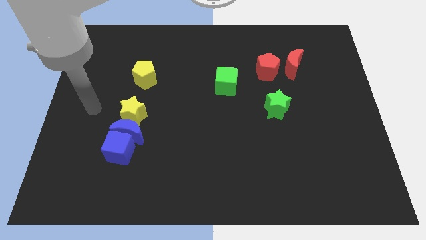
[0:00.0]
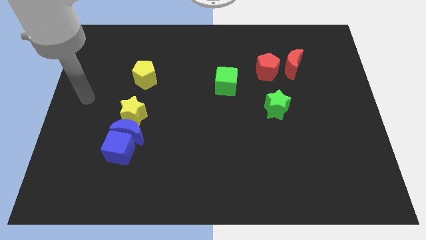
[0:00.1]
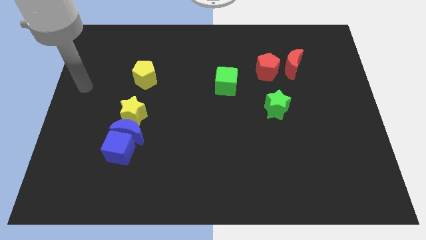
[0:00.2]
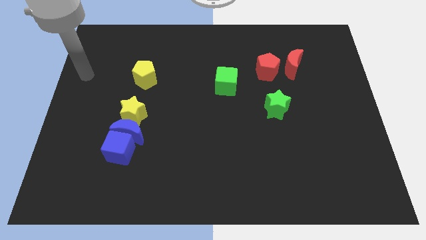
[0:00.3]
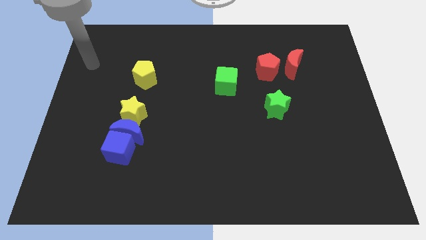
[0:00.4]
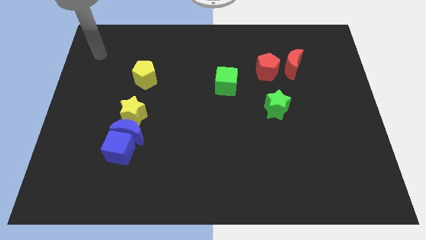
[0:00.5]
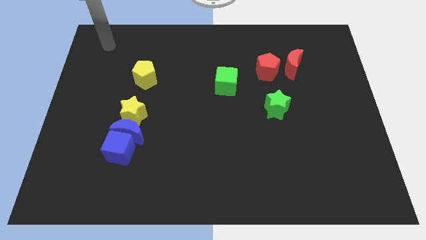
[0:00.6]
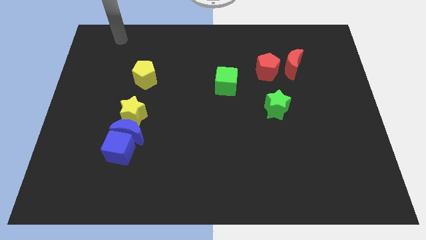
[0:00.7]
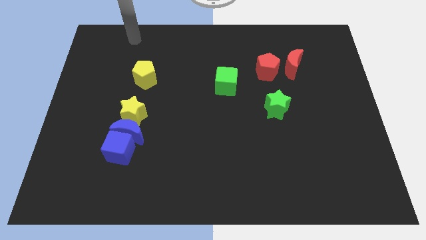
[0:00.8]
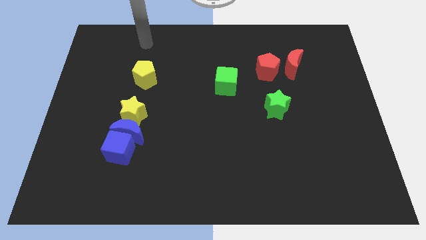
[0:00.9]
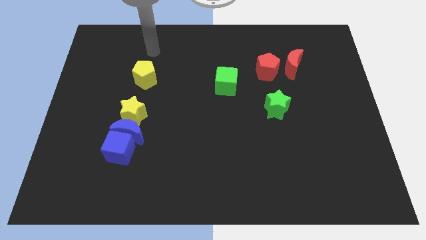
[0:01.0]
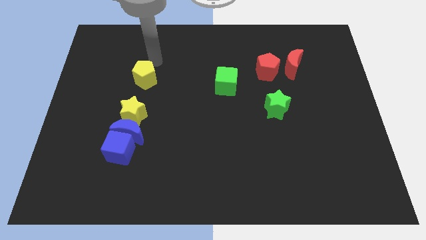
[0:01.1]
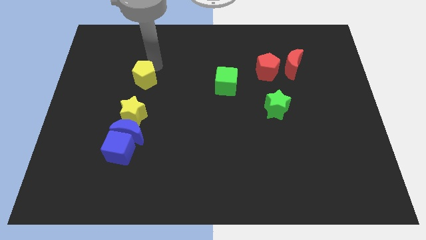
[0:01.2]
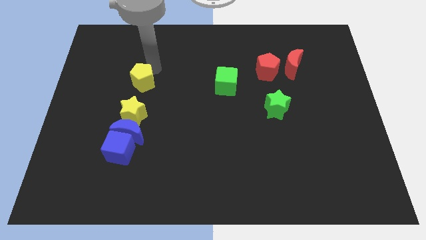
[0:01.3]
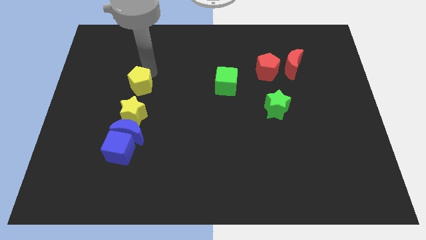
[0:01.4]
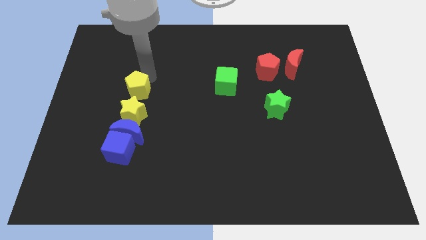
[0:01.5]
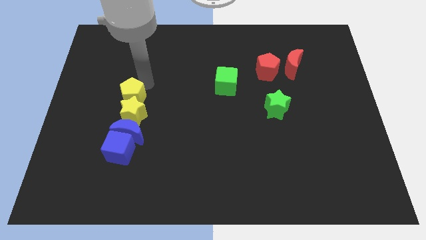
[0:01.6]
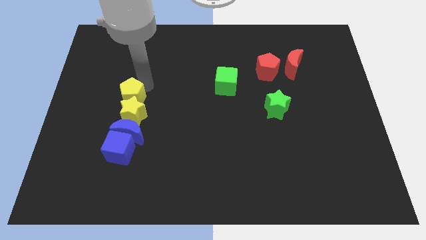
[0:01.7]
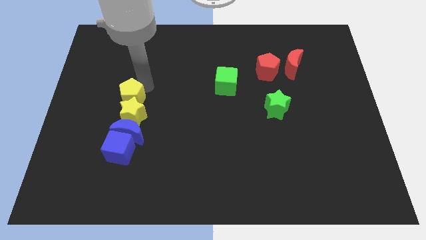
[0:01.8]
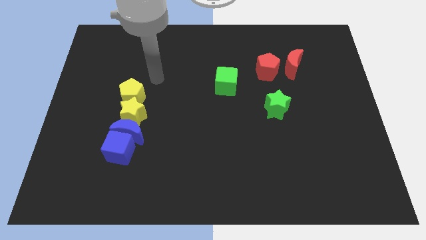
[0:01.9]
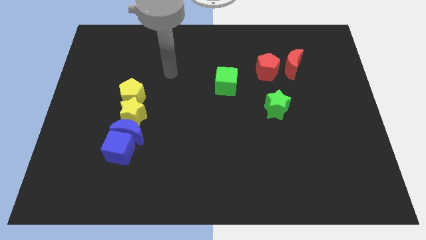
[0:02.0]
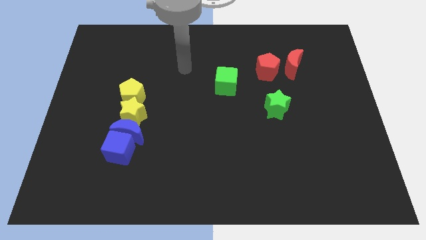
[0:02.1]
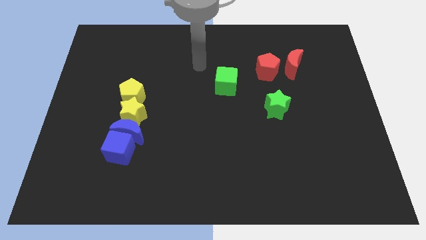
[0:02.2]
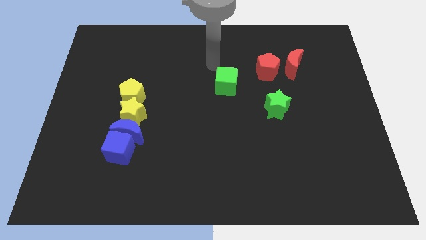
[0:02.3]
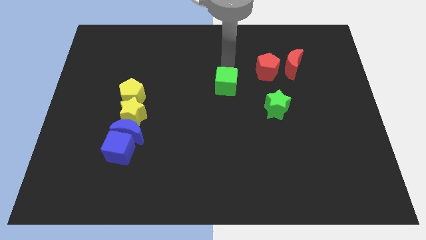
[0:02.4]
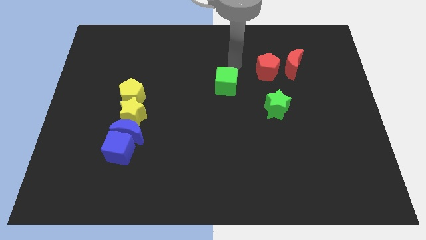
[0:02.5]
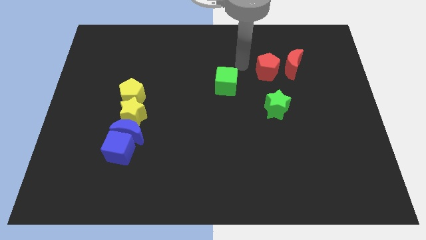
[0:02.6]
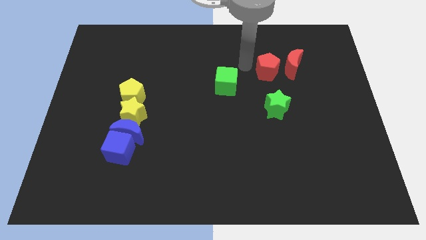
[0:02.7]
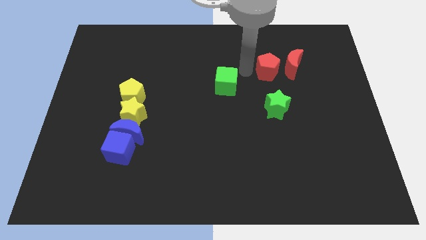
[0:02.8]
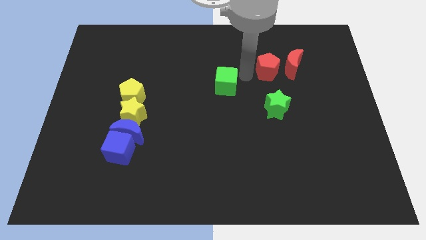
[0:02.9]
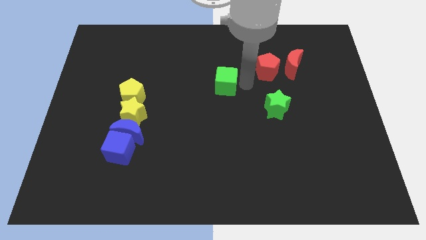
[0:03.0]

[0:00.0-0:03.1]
move the yellow pentagon into the yellow star

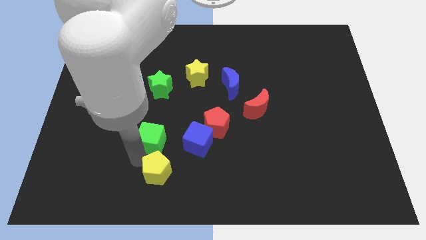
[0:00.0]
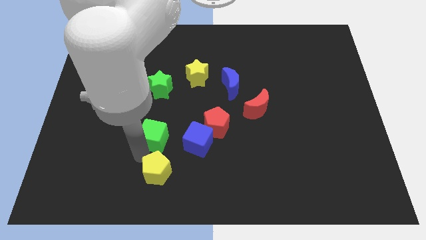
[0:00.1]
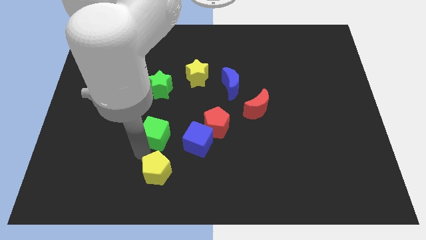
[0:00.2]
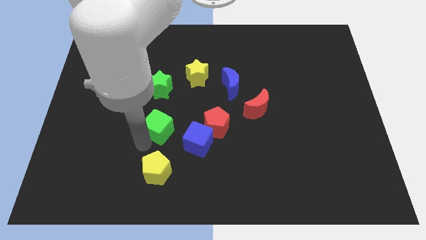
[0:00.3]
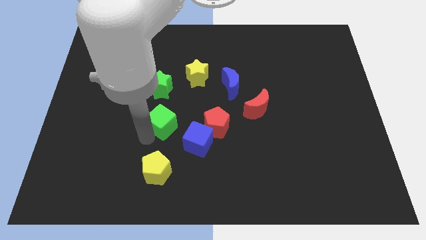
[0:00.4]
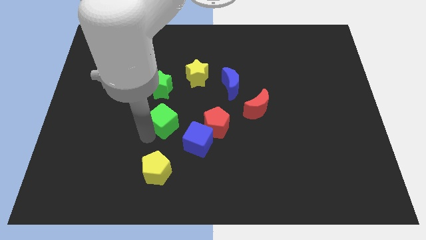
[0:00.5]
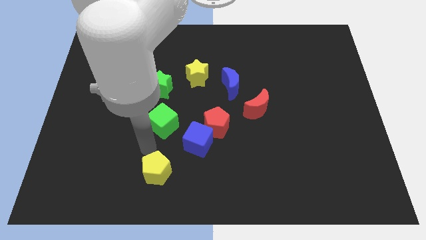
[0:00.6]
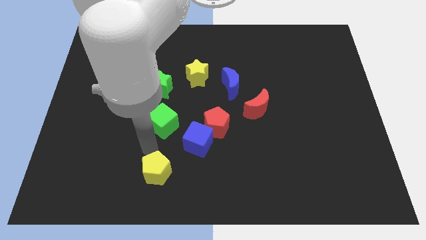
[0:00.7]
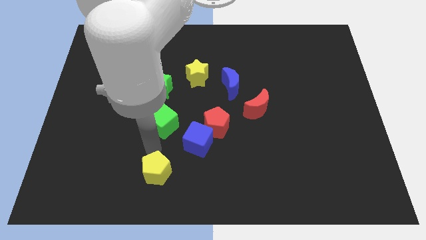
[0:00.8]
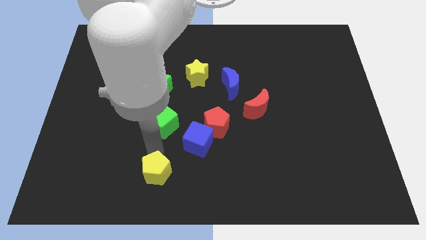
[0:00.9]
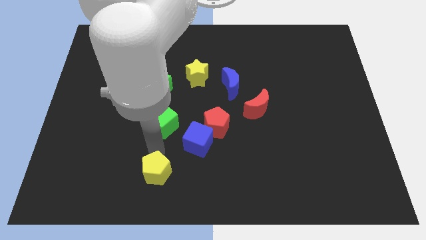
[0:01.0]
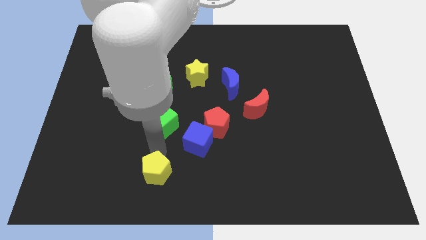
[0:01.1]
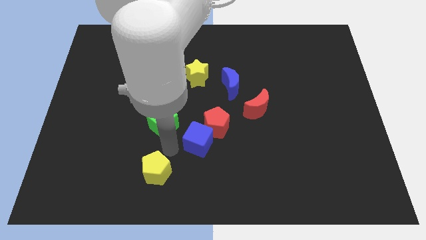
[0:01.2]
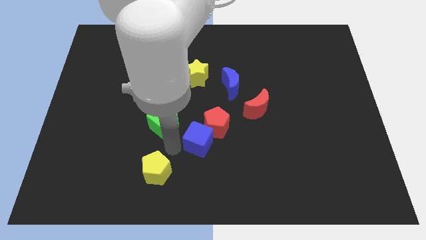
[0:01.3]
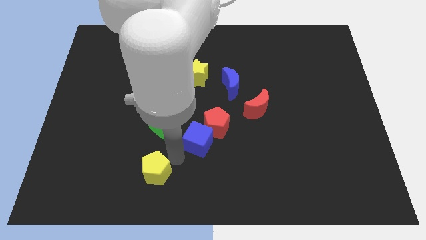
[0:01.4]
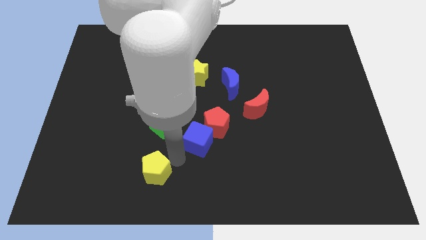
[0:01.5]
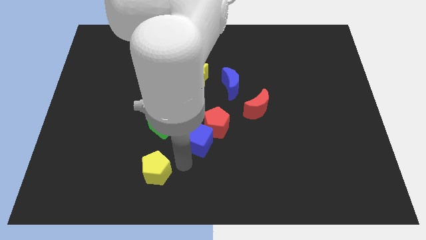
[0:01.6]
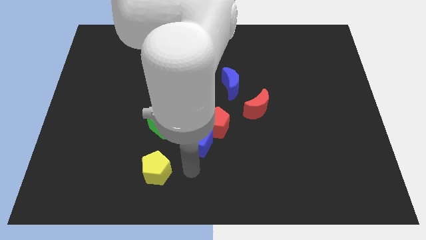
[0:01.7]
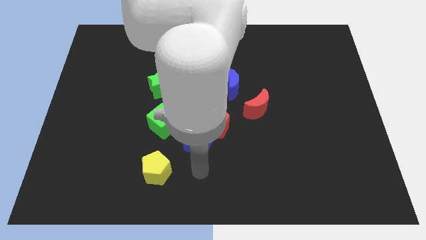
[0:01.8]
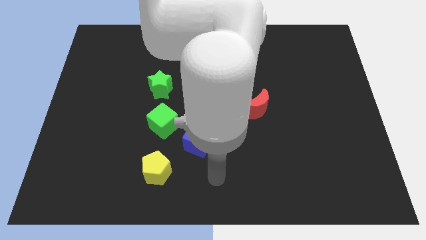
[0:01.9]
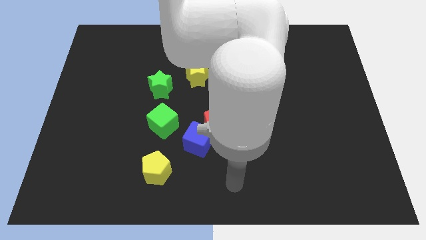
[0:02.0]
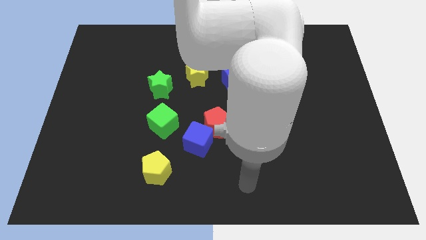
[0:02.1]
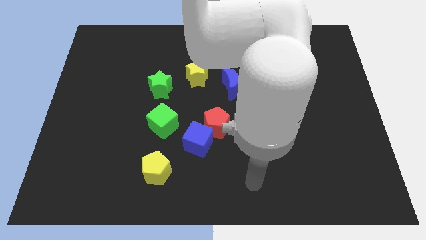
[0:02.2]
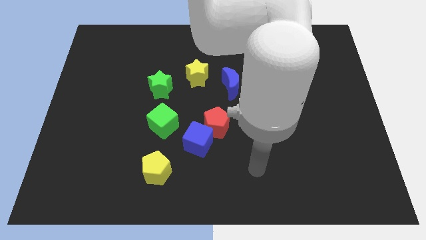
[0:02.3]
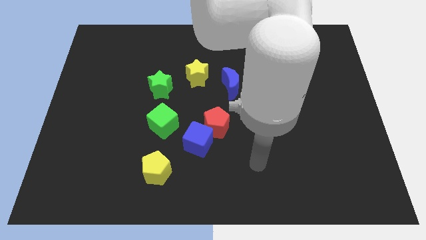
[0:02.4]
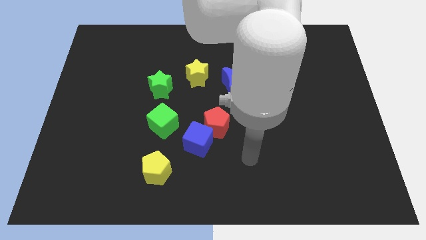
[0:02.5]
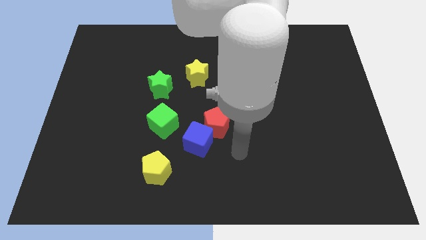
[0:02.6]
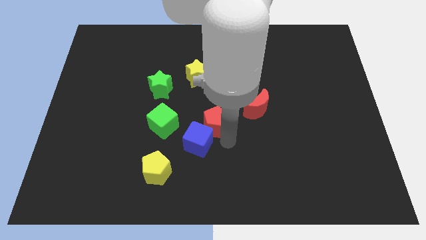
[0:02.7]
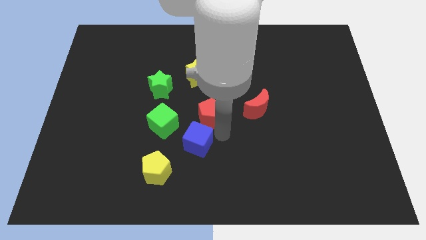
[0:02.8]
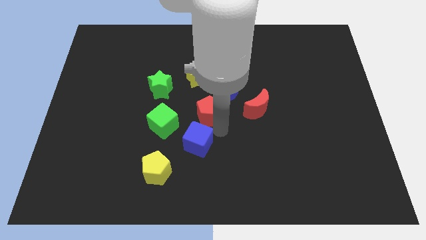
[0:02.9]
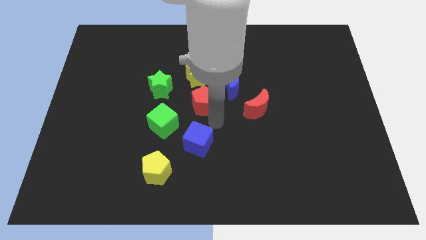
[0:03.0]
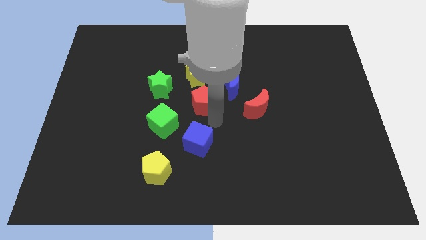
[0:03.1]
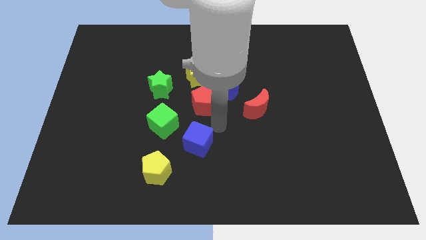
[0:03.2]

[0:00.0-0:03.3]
move the red pentagon to the center of the board

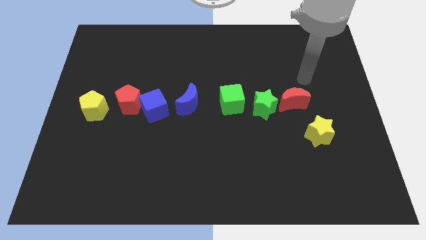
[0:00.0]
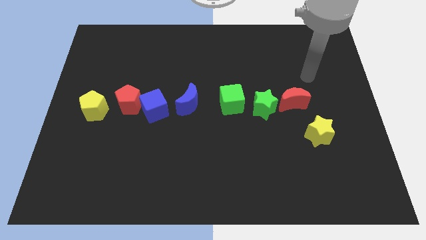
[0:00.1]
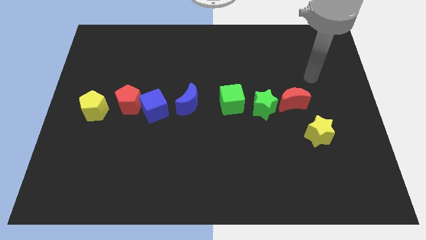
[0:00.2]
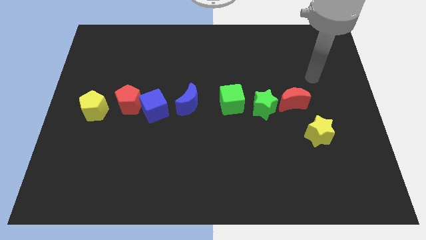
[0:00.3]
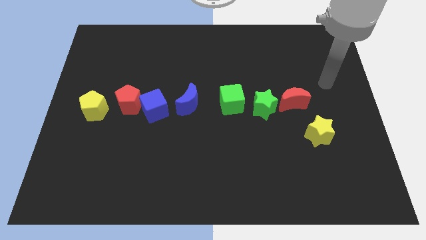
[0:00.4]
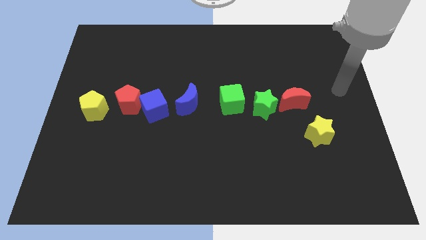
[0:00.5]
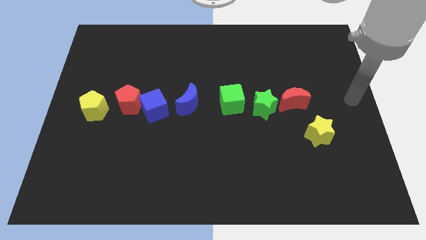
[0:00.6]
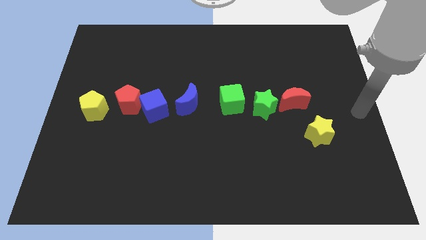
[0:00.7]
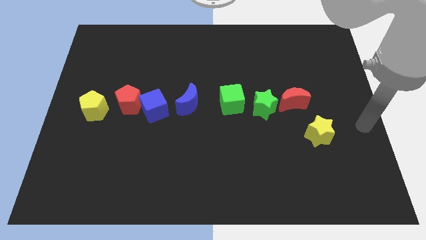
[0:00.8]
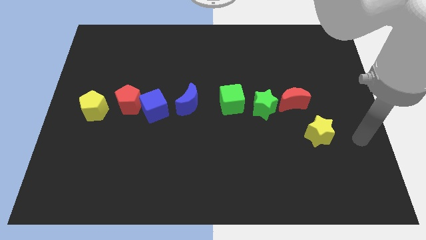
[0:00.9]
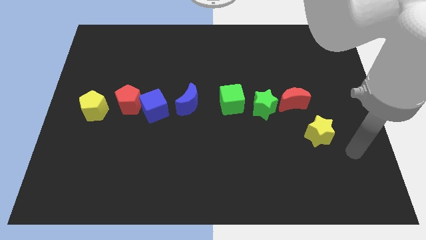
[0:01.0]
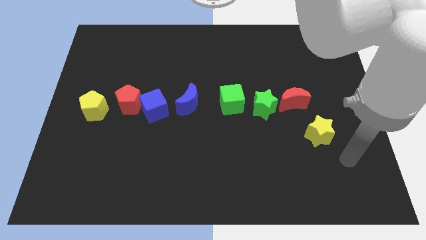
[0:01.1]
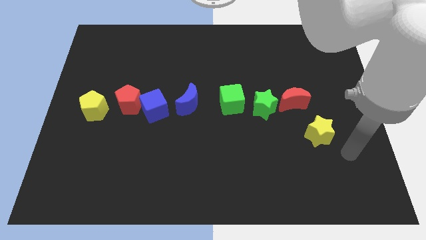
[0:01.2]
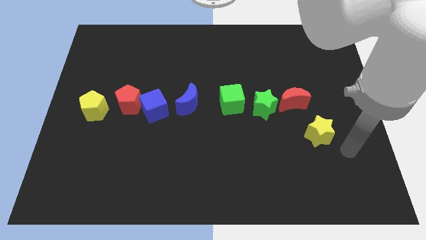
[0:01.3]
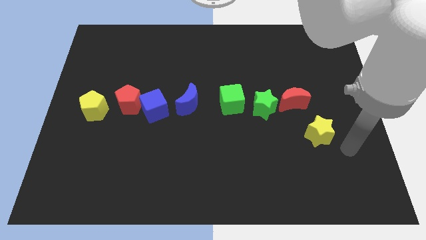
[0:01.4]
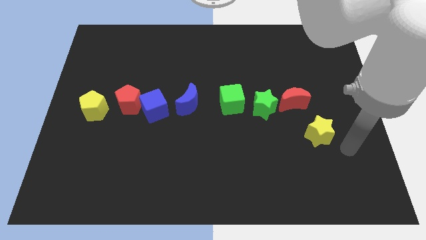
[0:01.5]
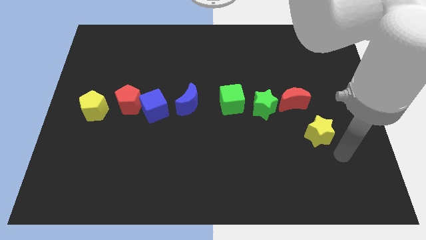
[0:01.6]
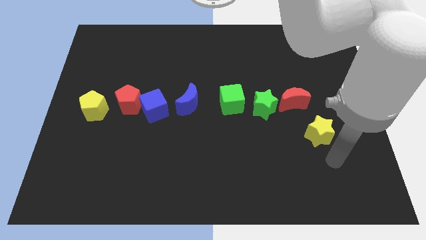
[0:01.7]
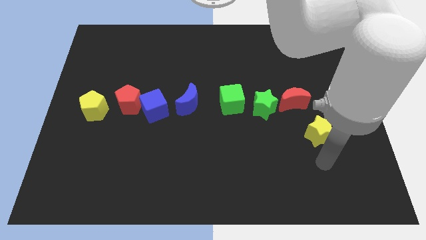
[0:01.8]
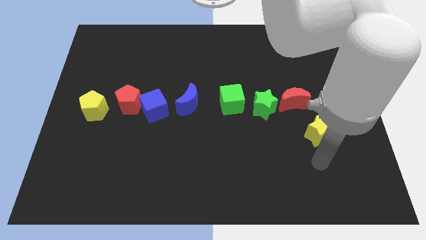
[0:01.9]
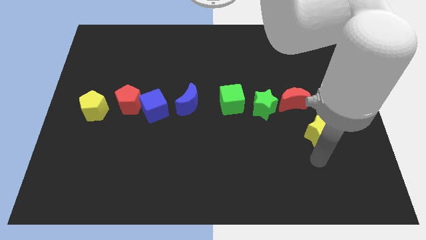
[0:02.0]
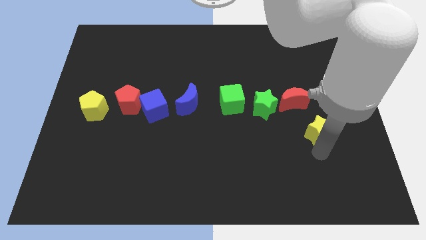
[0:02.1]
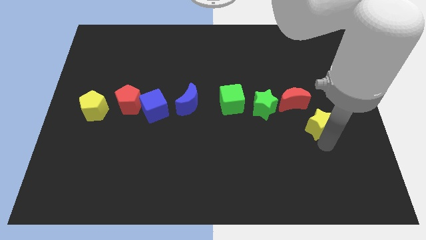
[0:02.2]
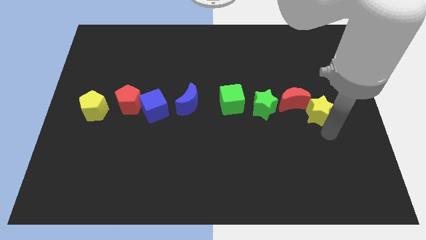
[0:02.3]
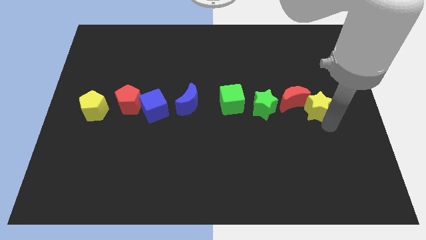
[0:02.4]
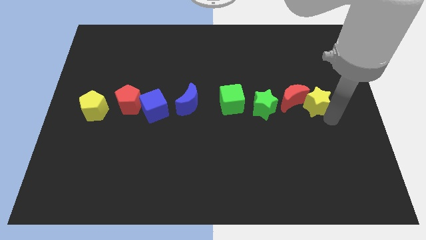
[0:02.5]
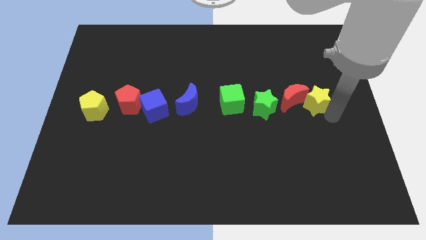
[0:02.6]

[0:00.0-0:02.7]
move the yellow star to the right of the red crescent
